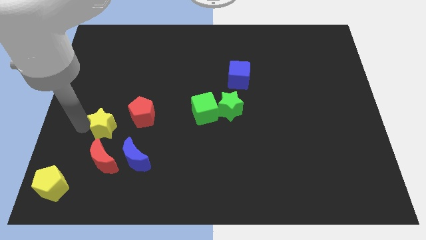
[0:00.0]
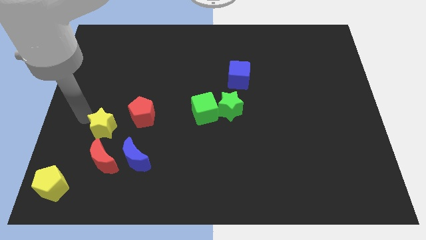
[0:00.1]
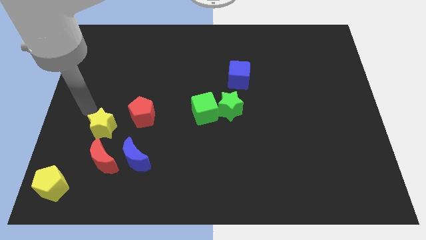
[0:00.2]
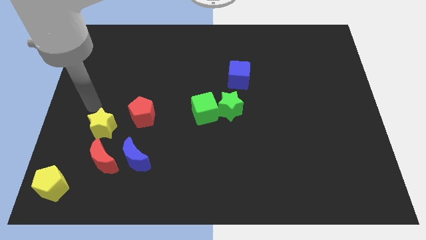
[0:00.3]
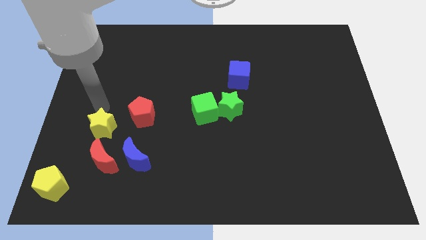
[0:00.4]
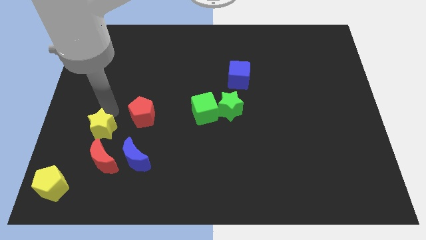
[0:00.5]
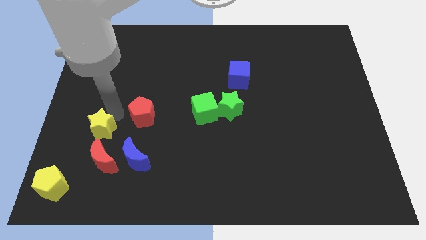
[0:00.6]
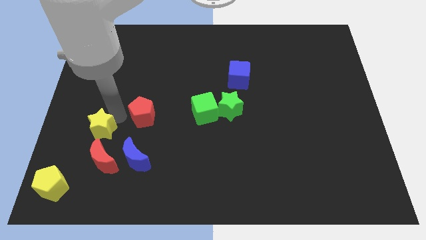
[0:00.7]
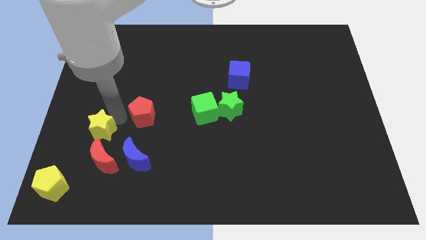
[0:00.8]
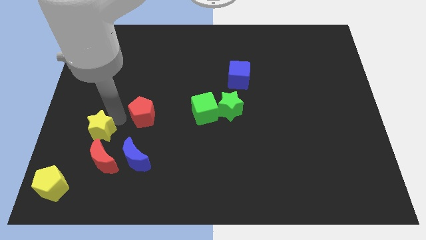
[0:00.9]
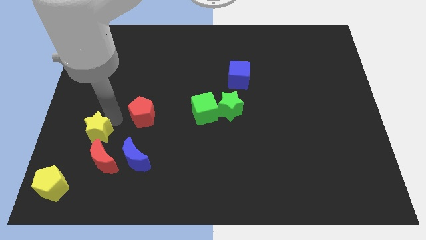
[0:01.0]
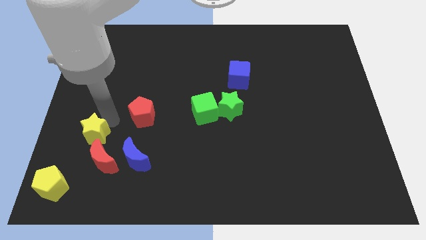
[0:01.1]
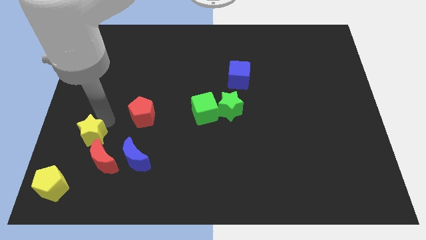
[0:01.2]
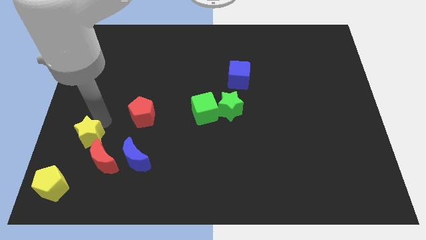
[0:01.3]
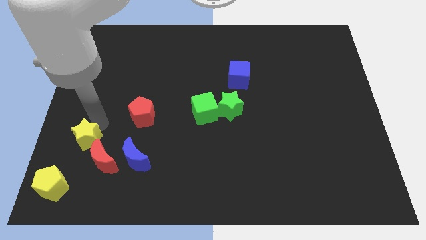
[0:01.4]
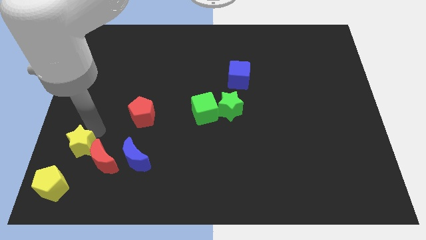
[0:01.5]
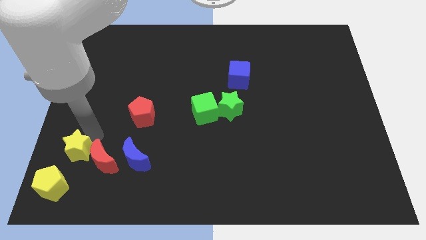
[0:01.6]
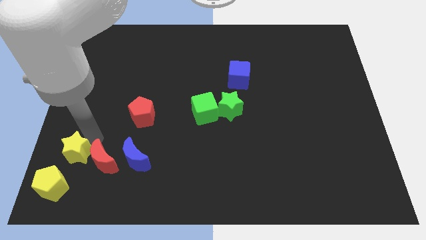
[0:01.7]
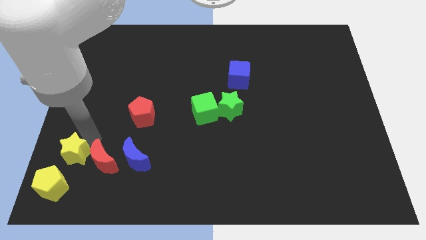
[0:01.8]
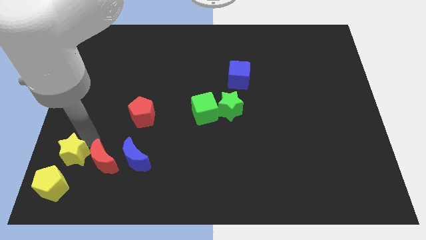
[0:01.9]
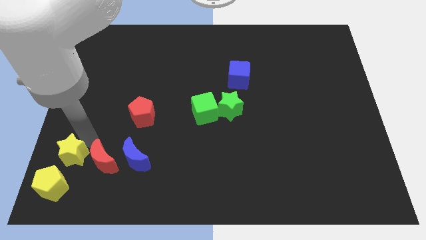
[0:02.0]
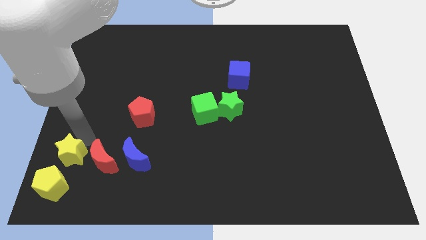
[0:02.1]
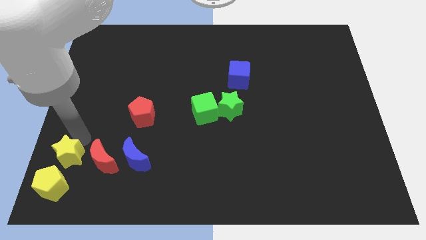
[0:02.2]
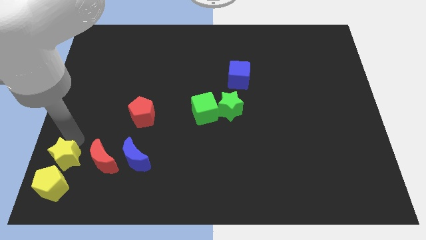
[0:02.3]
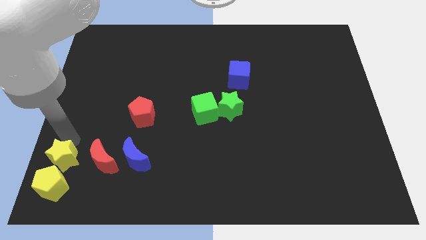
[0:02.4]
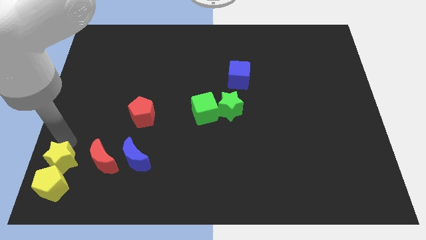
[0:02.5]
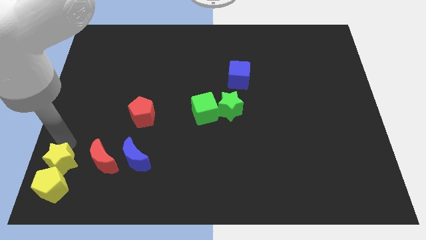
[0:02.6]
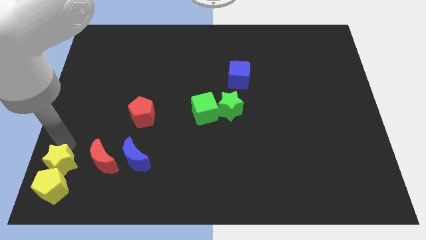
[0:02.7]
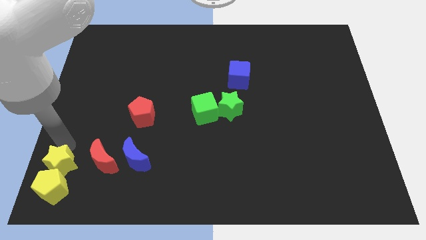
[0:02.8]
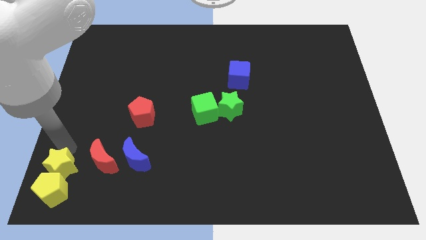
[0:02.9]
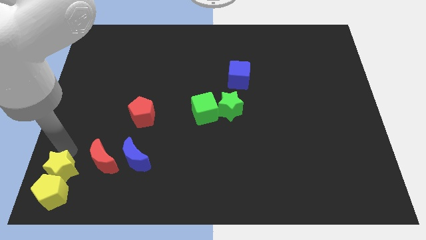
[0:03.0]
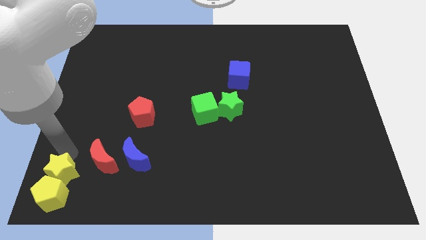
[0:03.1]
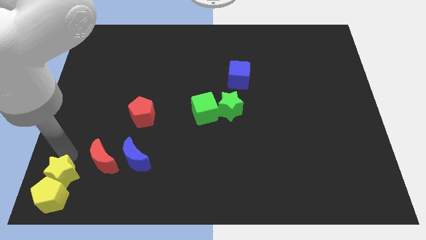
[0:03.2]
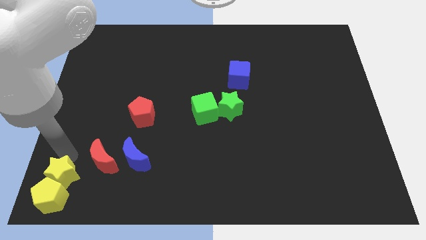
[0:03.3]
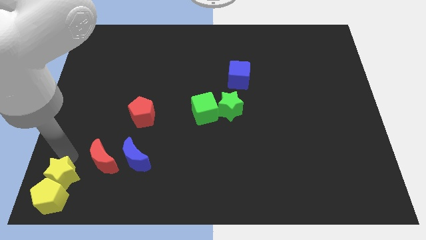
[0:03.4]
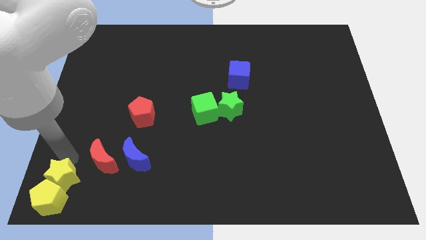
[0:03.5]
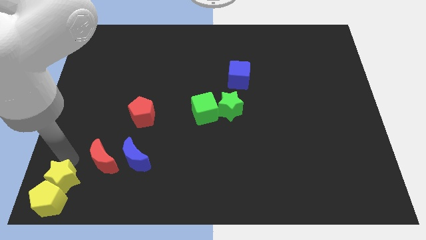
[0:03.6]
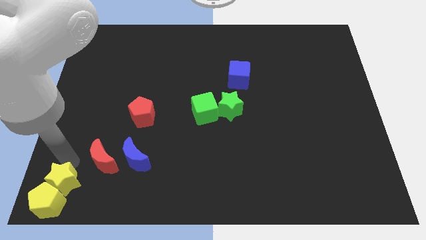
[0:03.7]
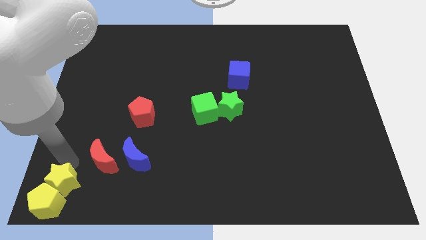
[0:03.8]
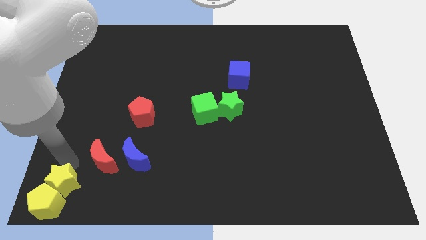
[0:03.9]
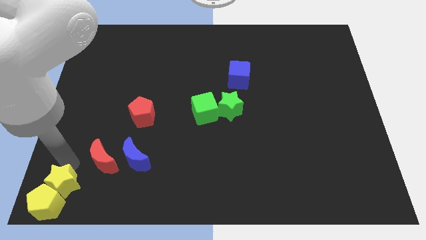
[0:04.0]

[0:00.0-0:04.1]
move the yellow star into the yellow pentagon to the bottom left

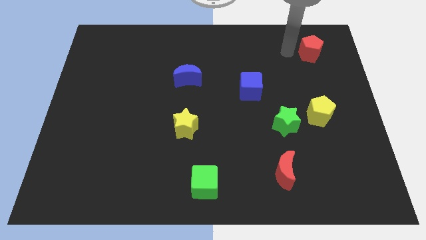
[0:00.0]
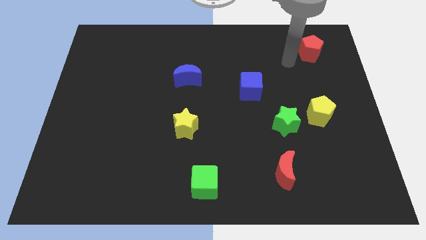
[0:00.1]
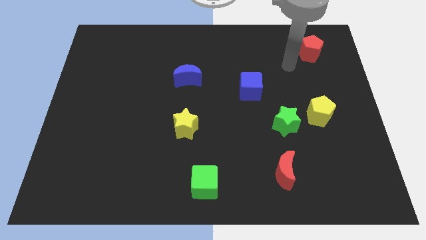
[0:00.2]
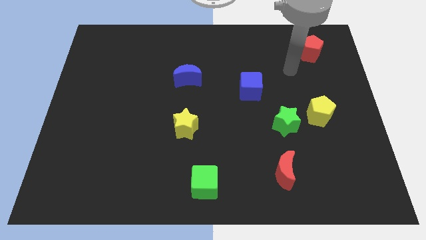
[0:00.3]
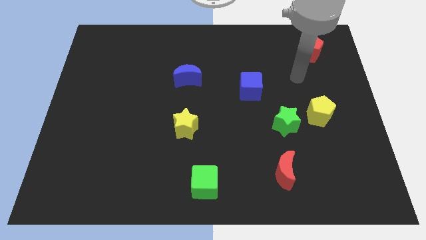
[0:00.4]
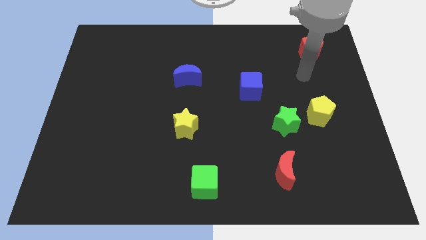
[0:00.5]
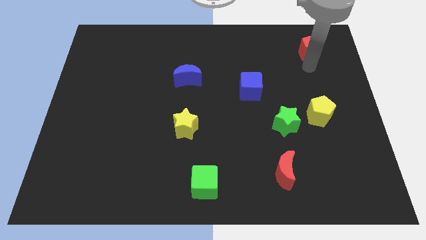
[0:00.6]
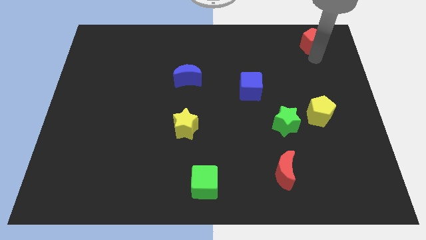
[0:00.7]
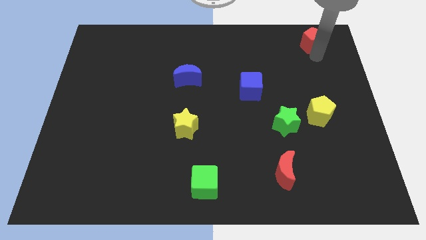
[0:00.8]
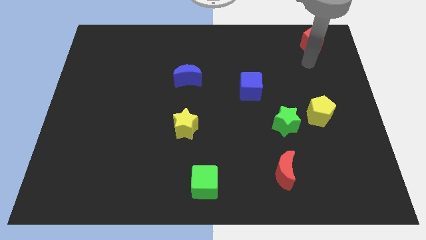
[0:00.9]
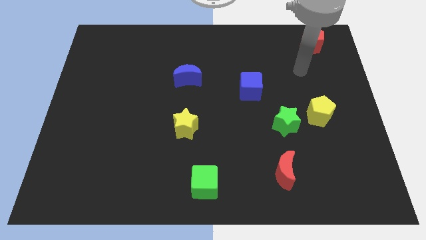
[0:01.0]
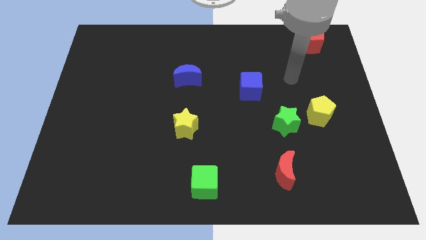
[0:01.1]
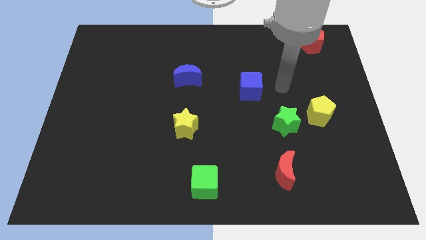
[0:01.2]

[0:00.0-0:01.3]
slightly move red pentagon to the top

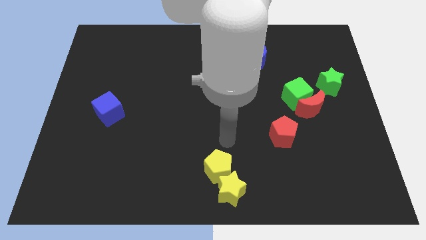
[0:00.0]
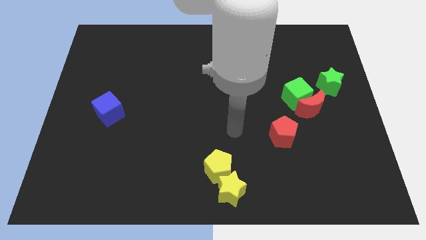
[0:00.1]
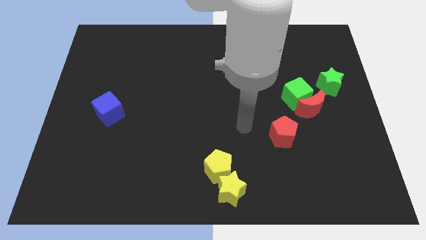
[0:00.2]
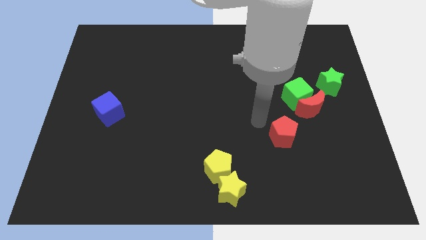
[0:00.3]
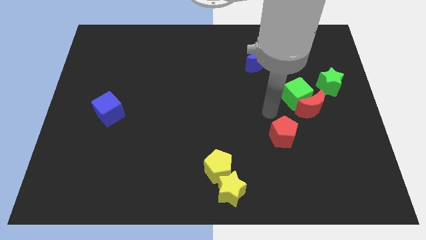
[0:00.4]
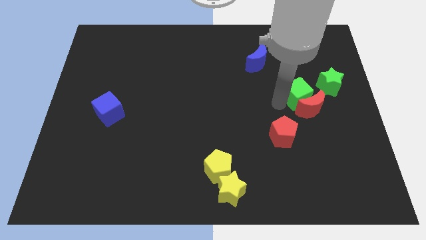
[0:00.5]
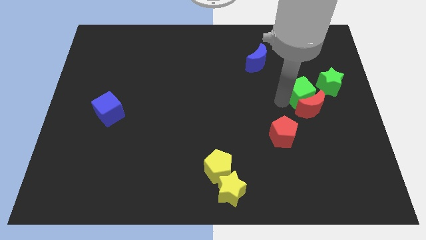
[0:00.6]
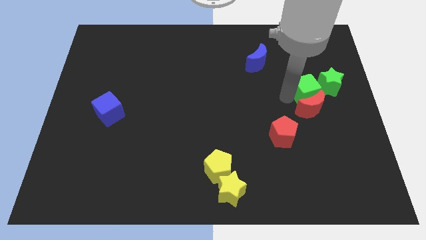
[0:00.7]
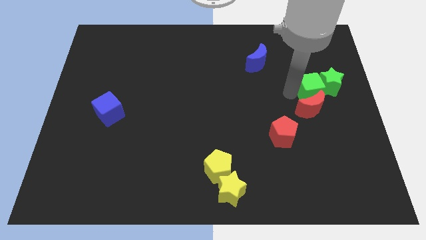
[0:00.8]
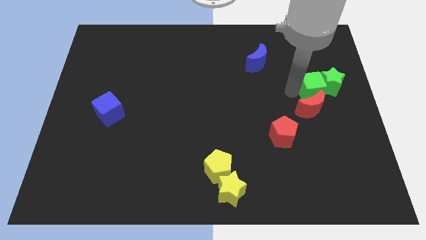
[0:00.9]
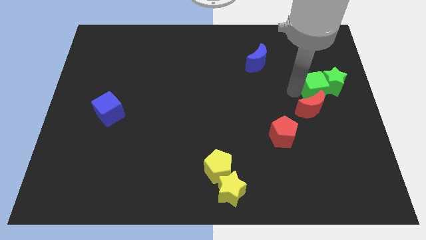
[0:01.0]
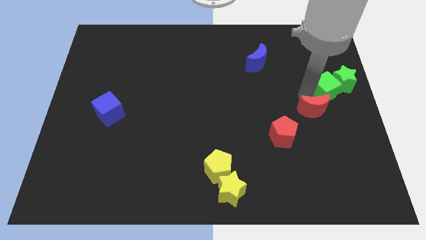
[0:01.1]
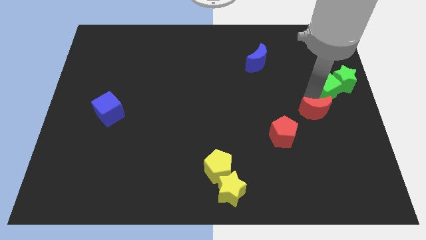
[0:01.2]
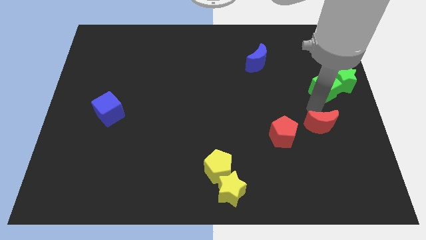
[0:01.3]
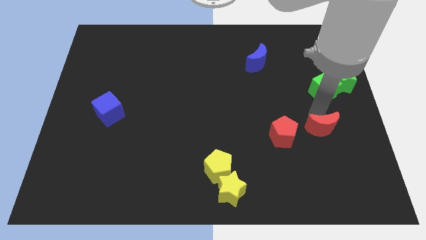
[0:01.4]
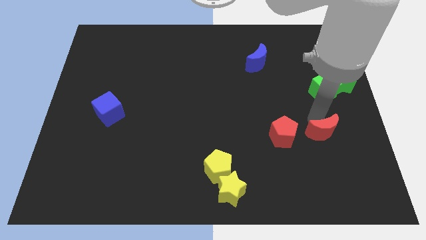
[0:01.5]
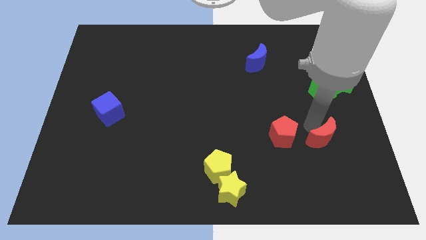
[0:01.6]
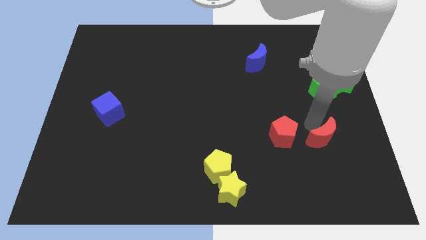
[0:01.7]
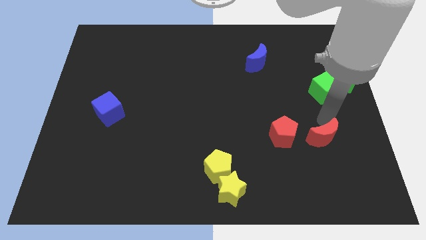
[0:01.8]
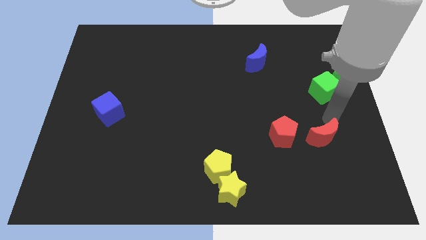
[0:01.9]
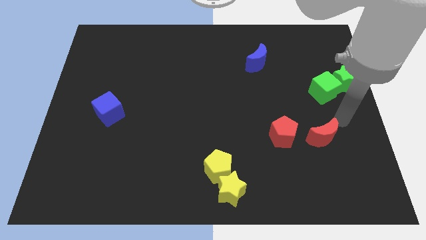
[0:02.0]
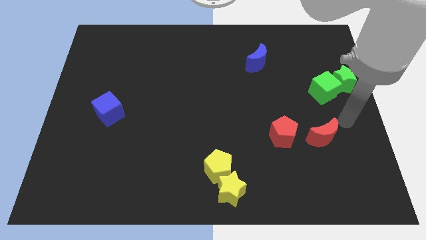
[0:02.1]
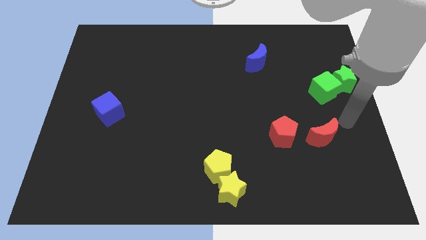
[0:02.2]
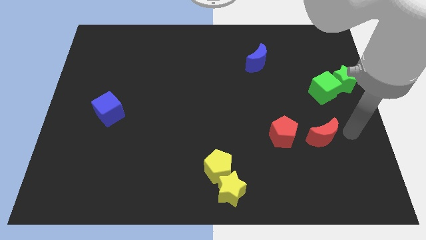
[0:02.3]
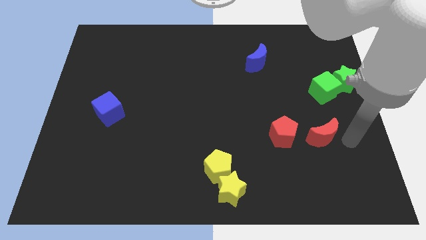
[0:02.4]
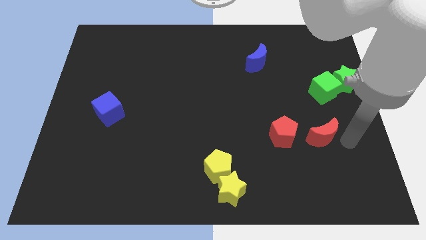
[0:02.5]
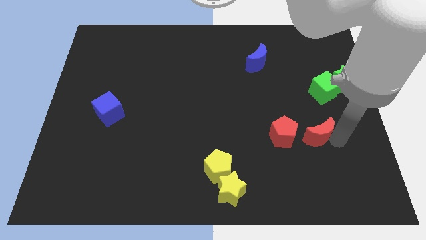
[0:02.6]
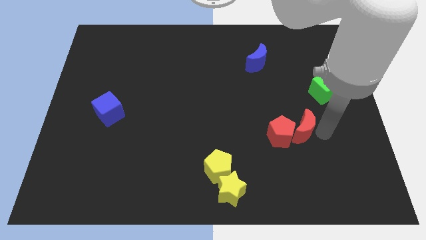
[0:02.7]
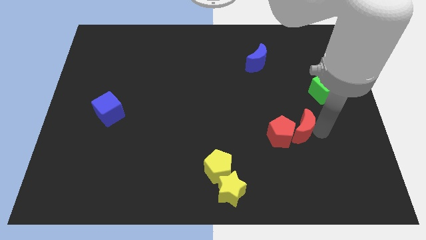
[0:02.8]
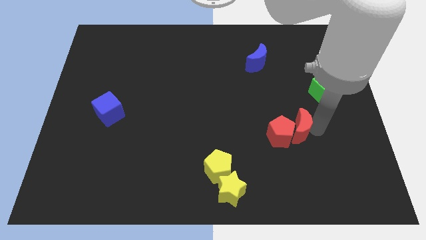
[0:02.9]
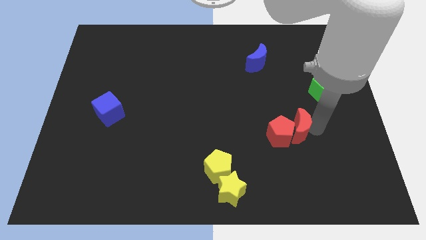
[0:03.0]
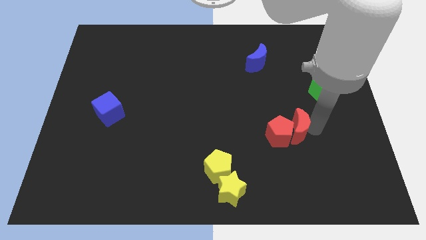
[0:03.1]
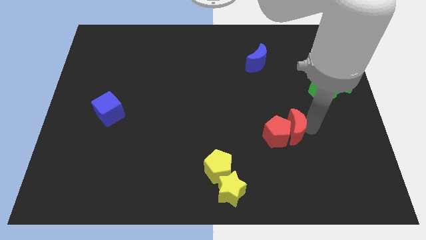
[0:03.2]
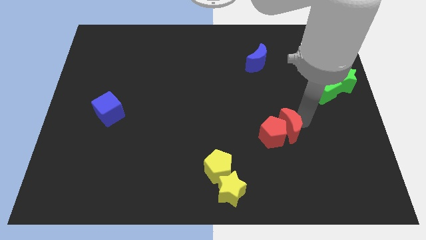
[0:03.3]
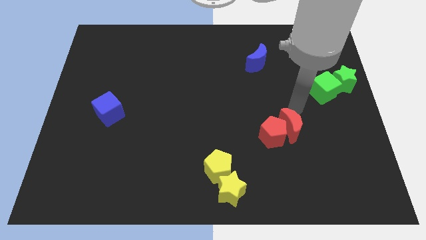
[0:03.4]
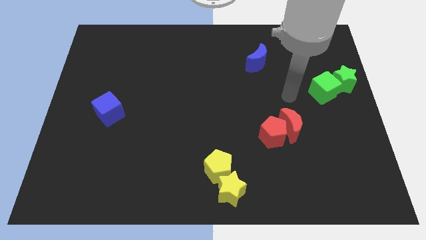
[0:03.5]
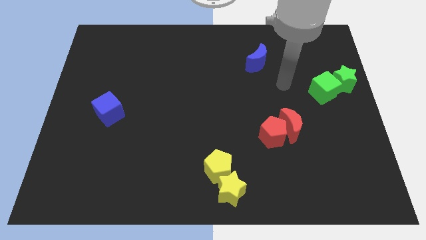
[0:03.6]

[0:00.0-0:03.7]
separate red blocks and the green blocks
